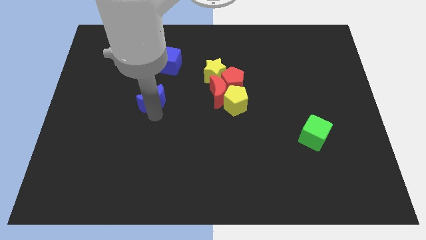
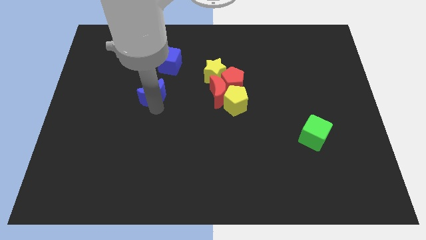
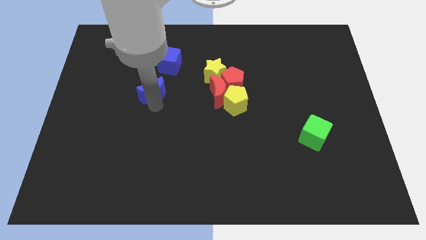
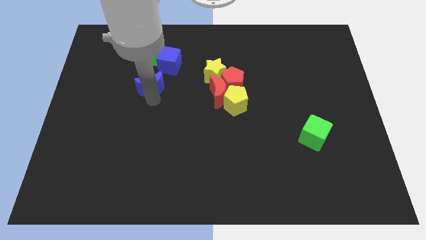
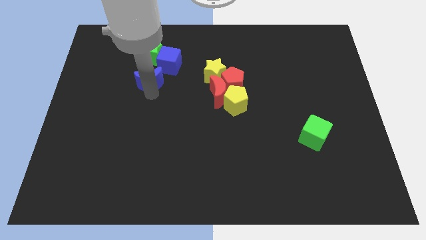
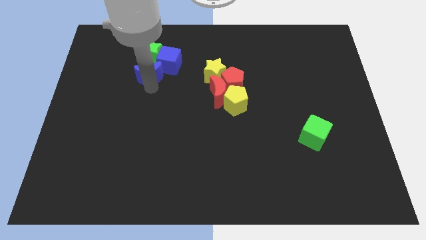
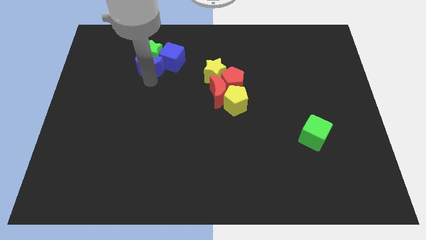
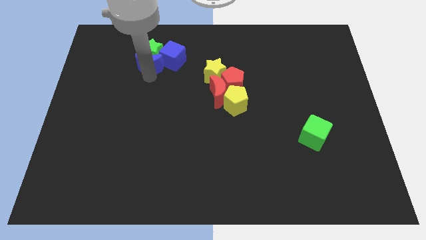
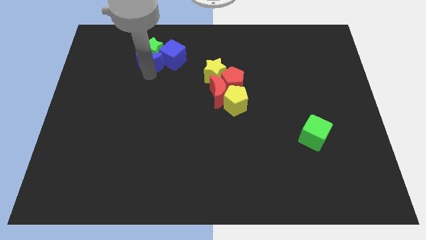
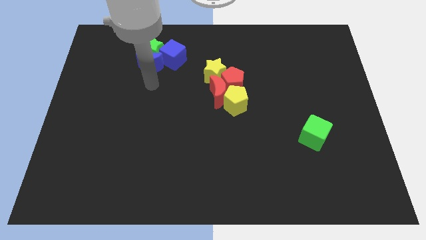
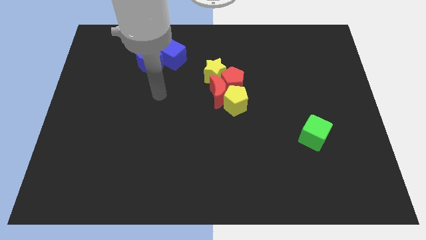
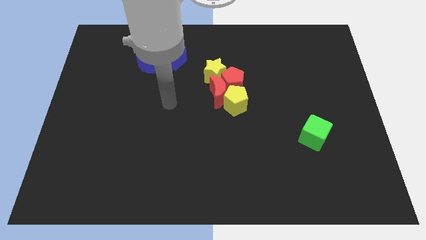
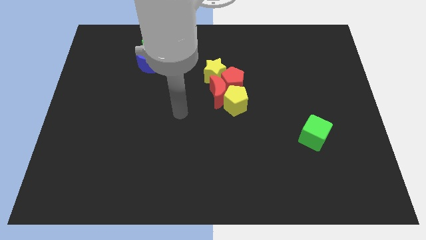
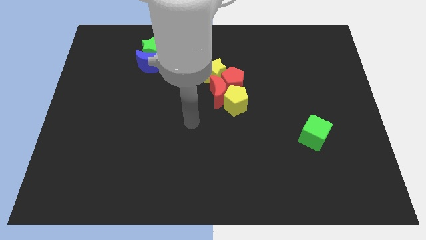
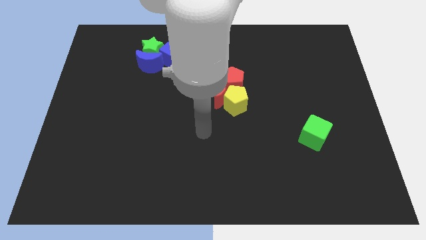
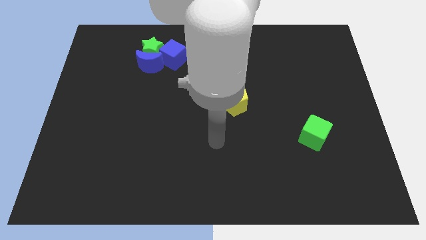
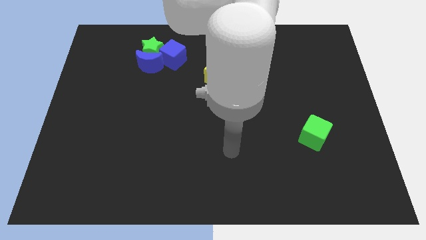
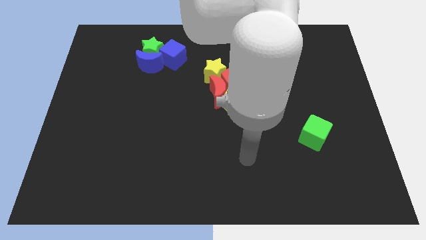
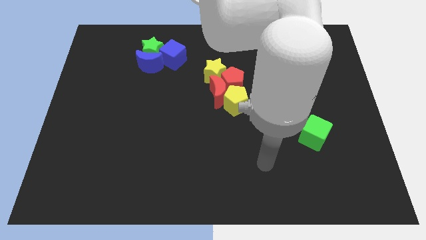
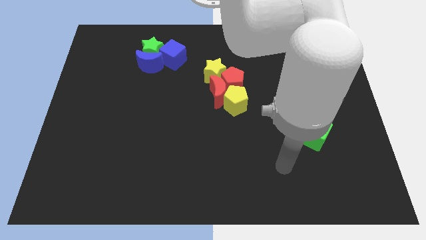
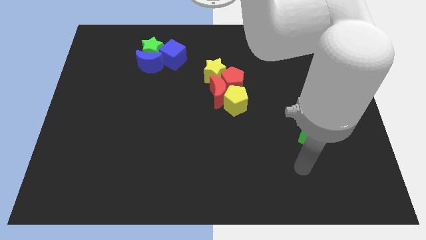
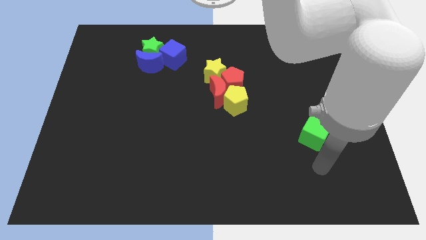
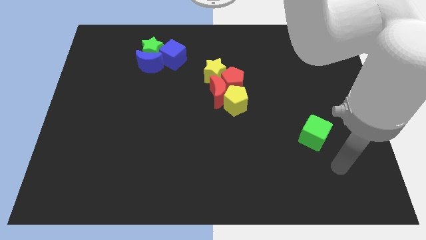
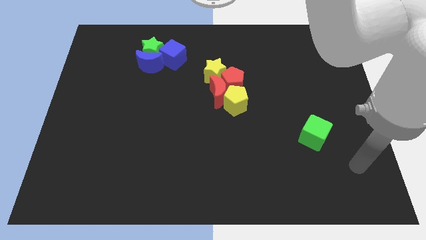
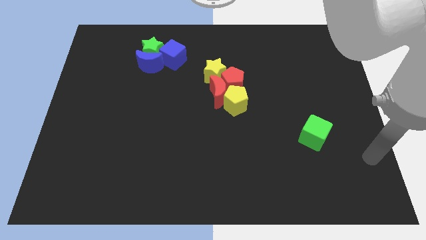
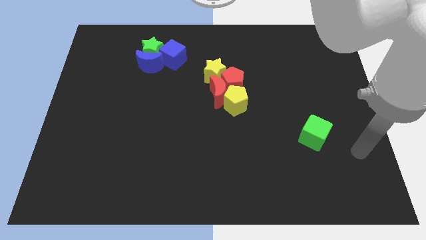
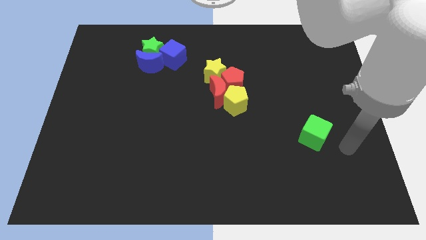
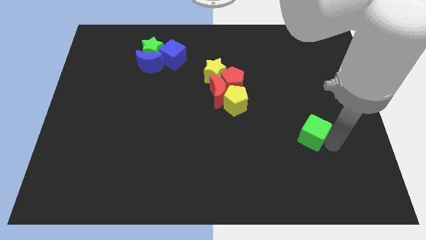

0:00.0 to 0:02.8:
push the blue moon into group of blocks

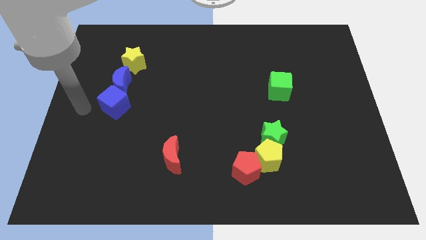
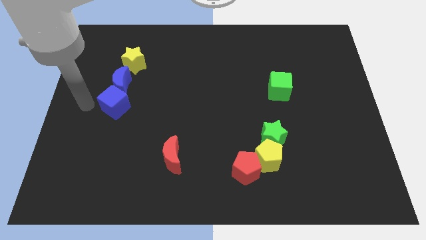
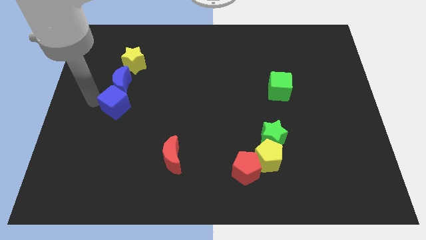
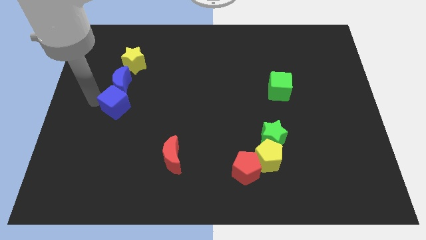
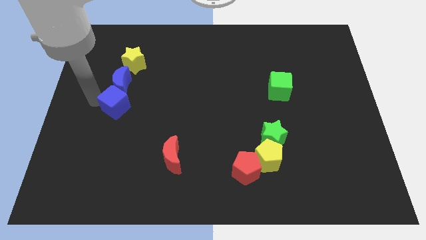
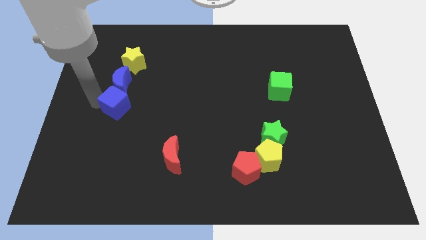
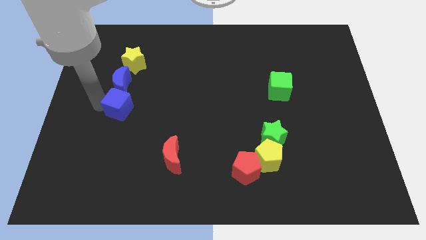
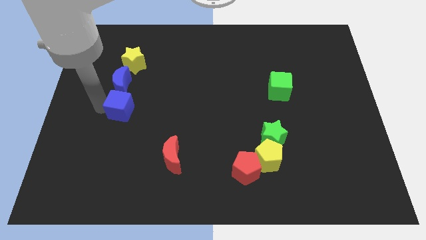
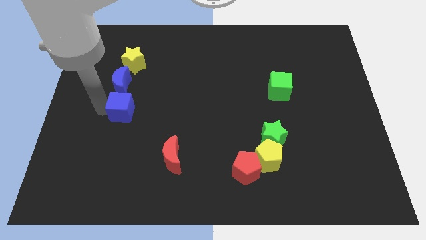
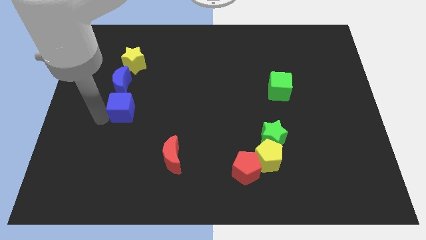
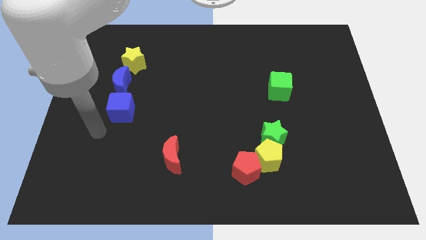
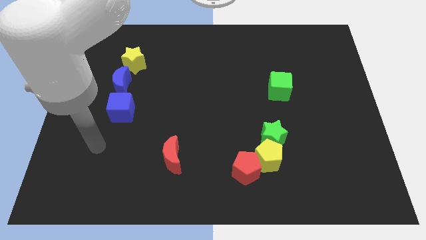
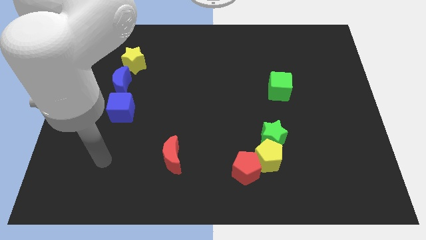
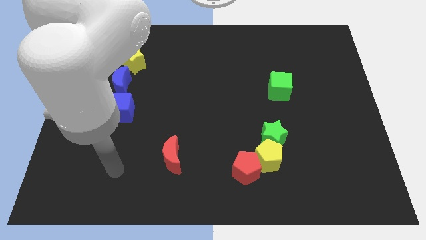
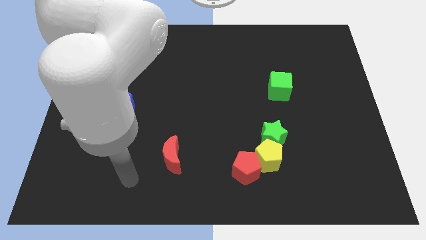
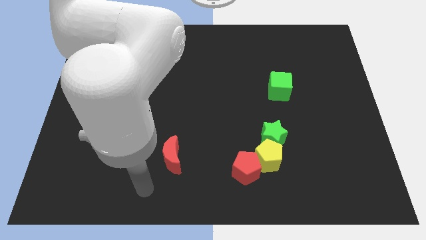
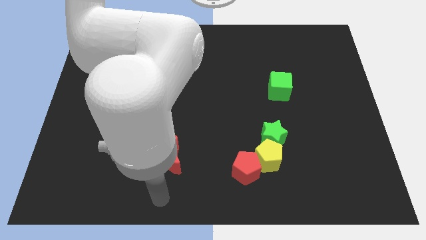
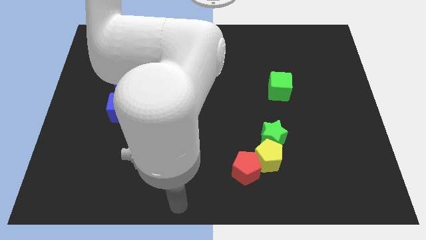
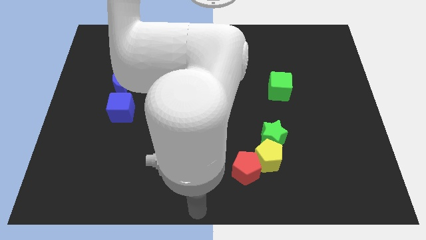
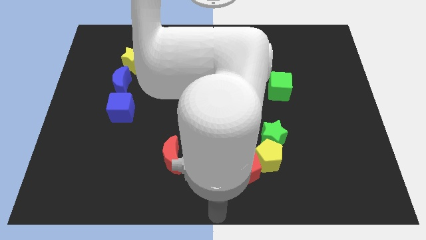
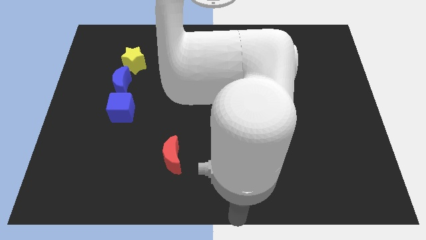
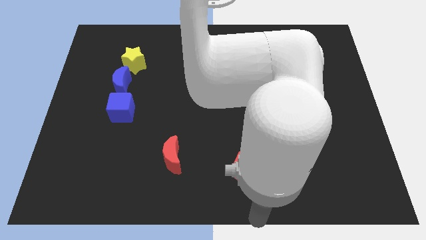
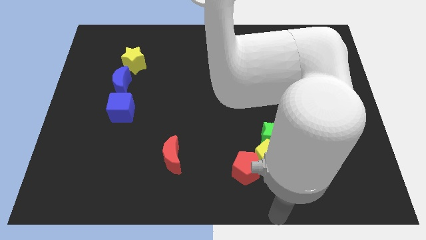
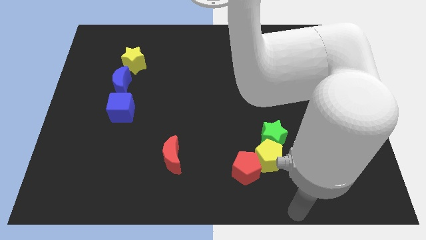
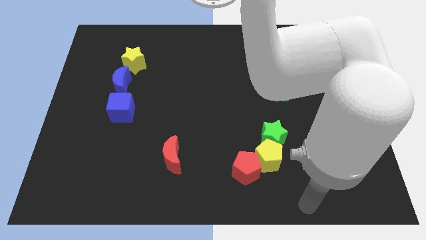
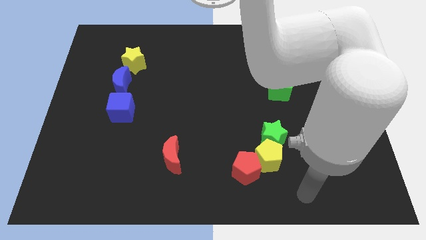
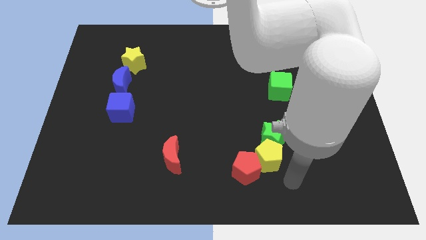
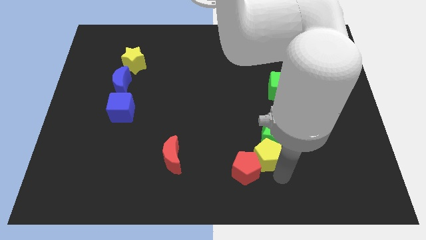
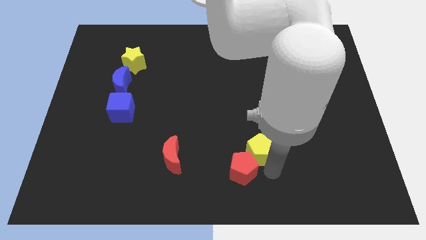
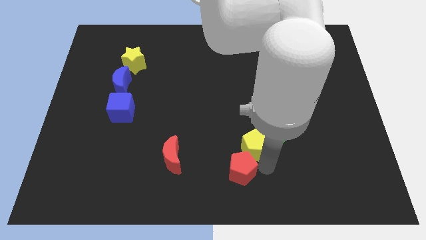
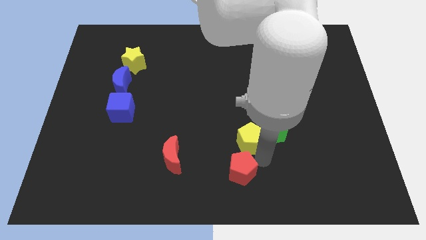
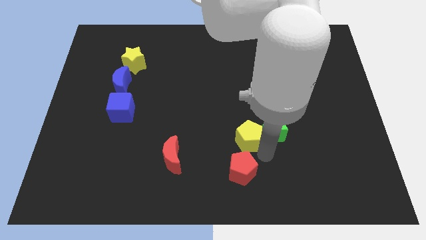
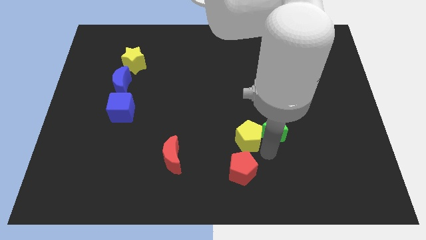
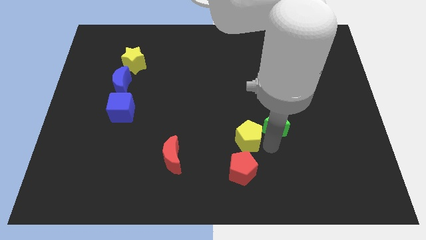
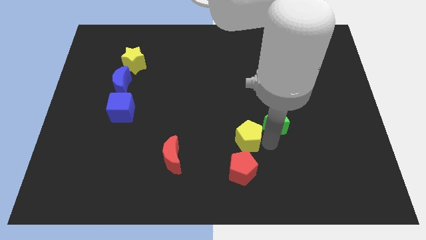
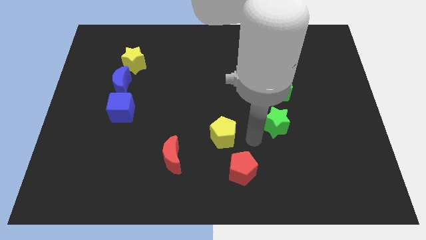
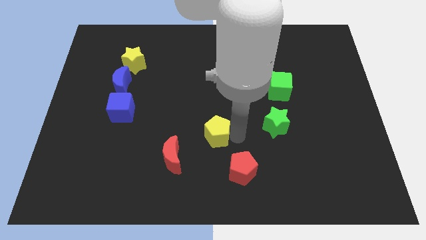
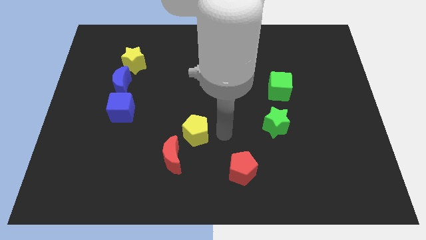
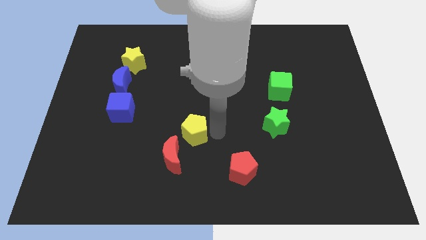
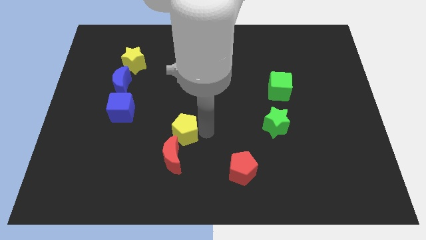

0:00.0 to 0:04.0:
place yellow pentagon to the top of red moon

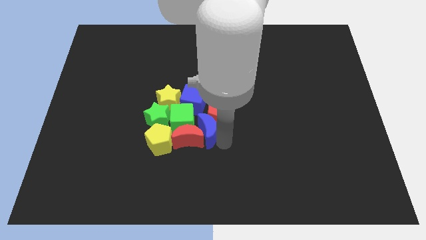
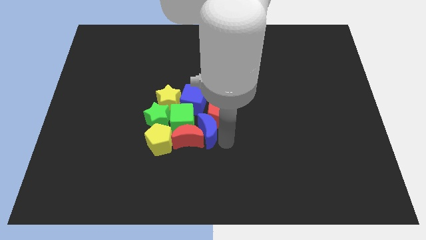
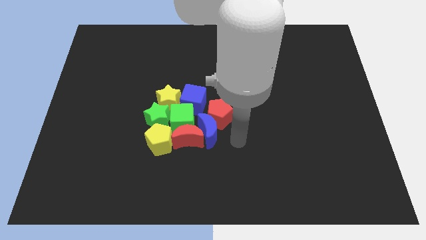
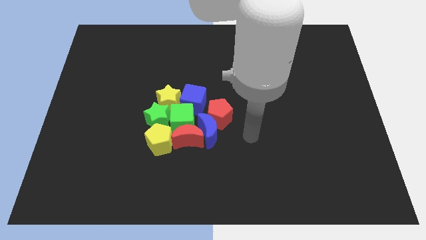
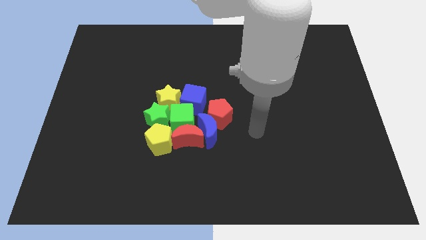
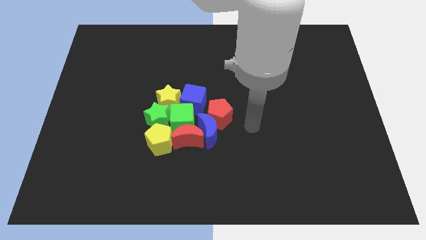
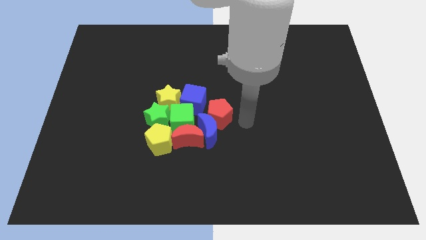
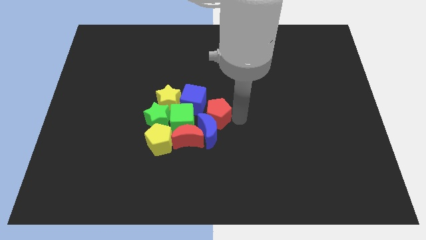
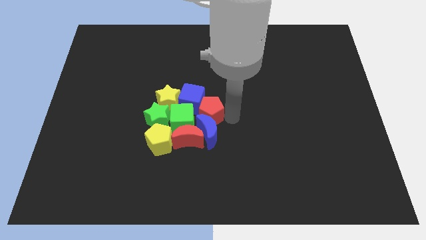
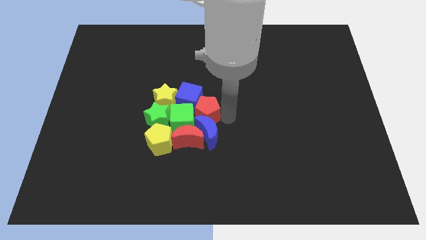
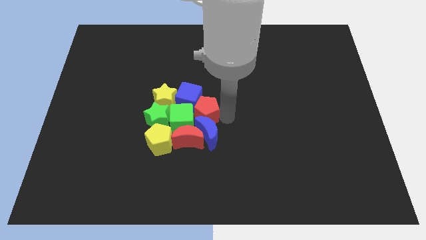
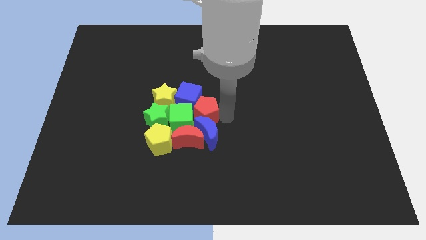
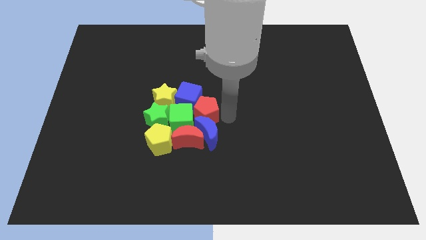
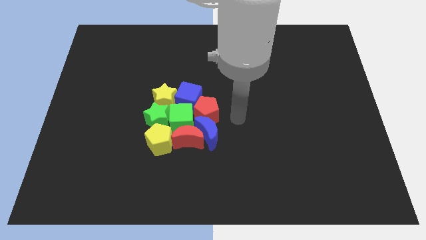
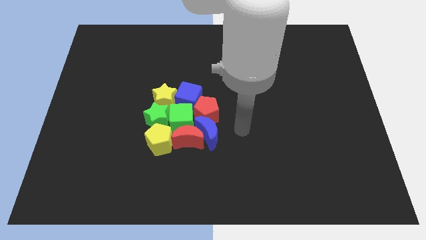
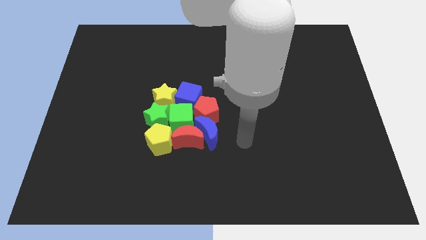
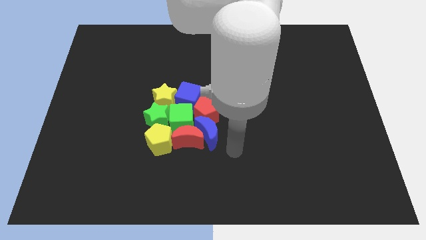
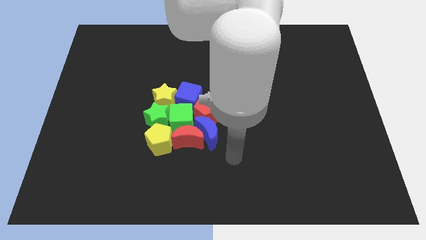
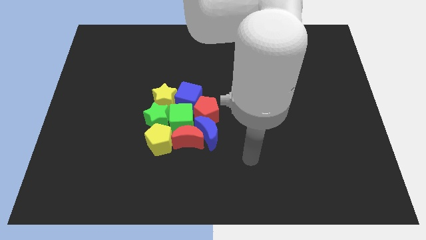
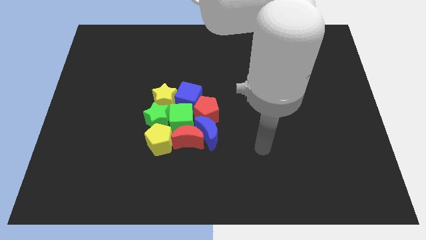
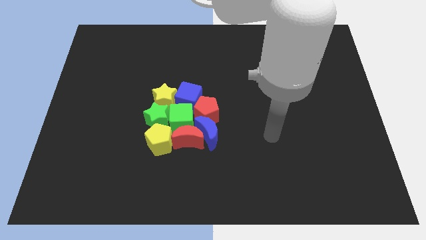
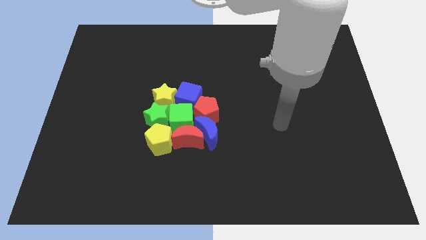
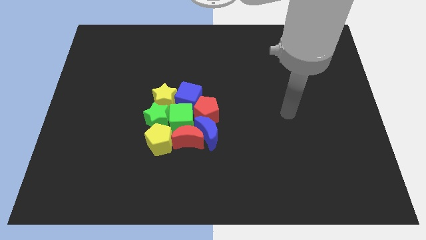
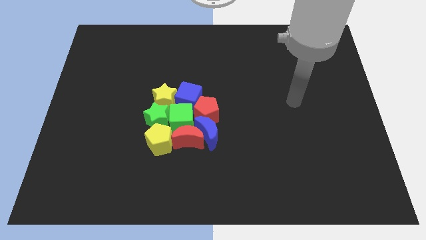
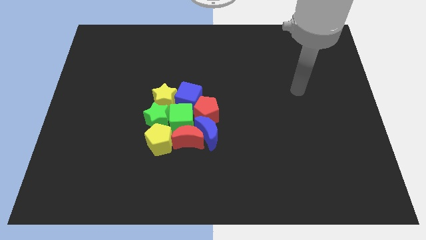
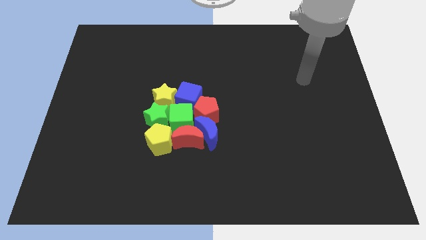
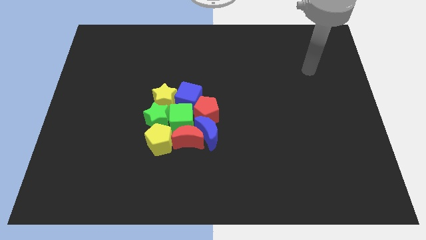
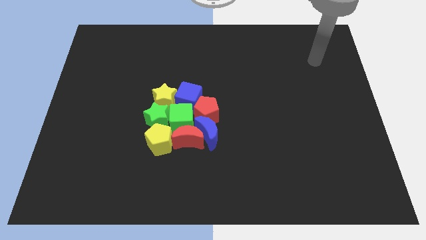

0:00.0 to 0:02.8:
move your arm away from group of blocks
